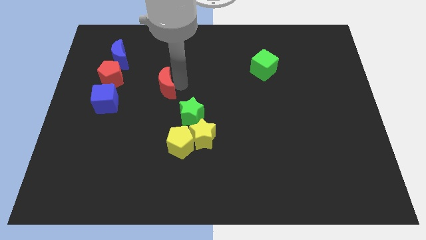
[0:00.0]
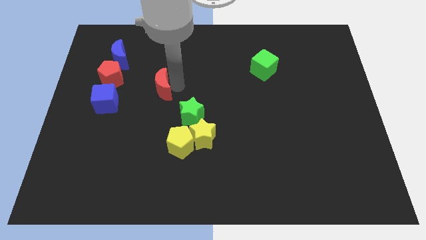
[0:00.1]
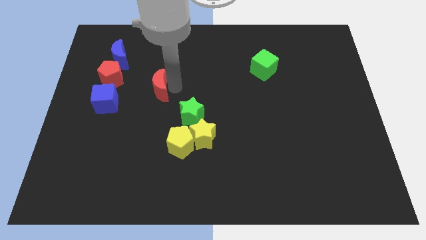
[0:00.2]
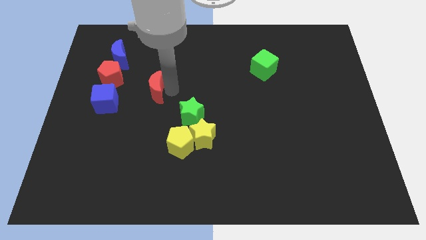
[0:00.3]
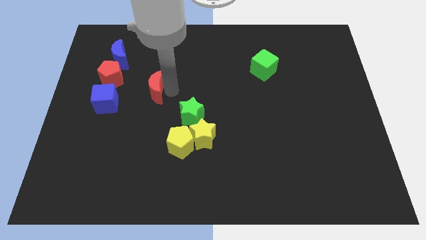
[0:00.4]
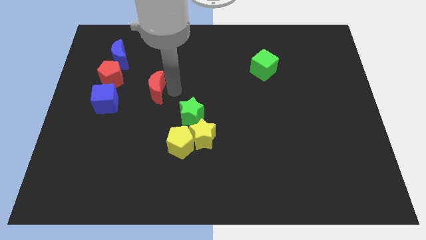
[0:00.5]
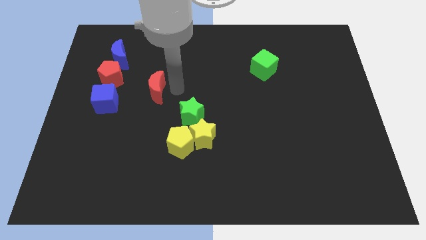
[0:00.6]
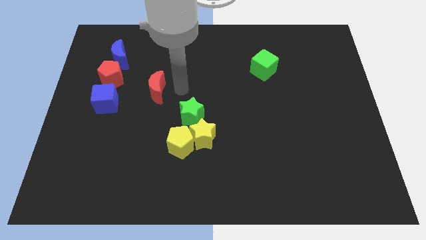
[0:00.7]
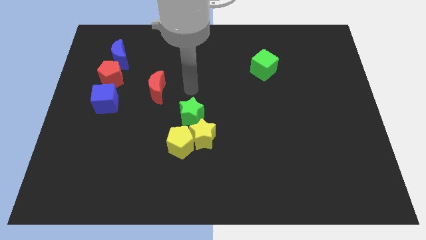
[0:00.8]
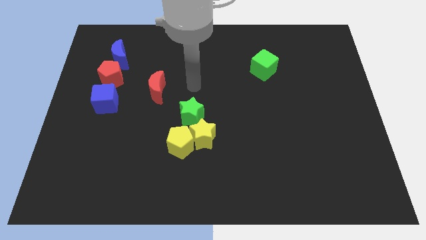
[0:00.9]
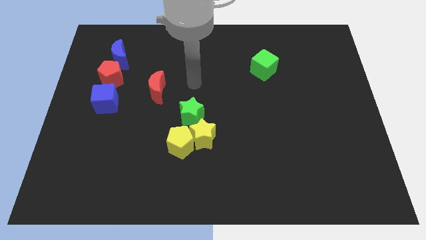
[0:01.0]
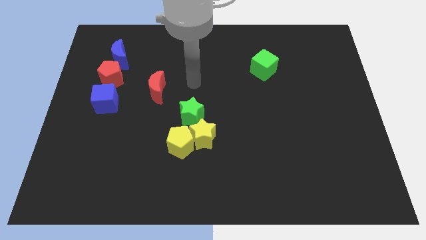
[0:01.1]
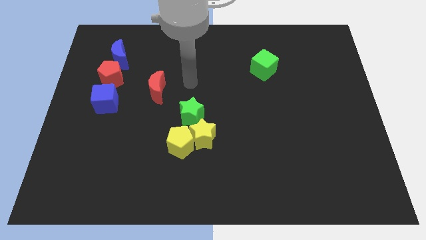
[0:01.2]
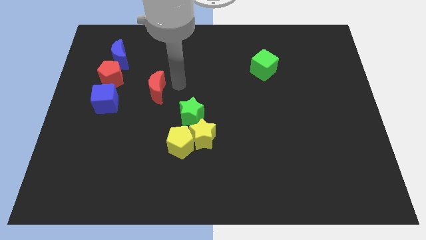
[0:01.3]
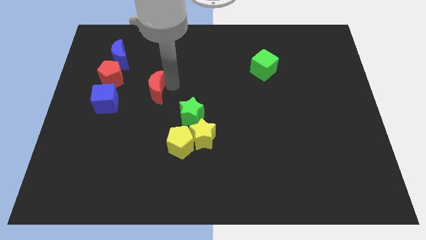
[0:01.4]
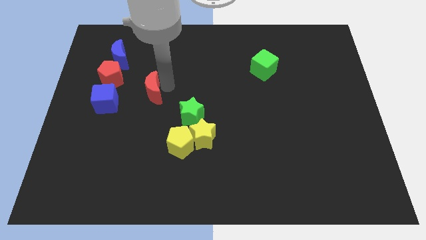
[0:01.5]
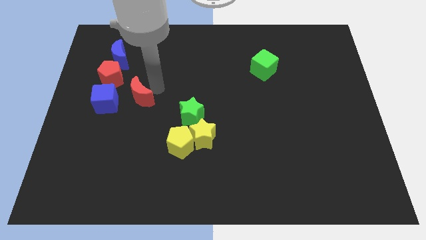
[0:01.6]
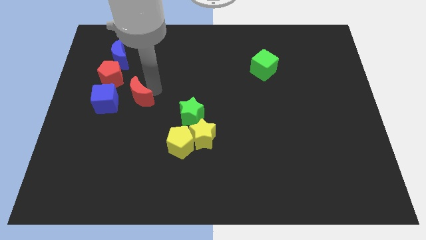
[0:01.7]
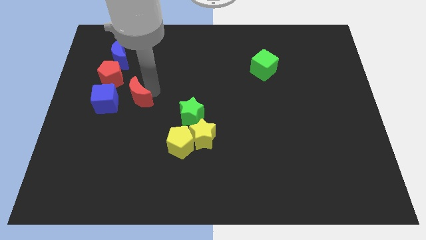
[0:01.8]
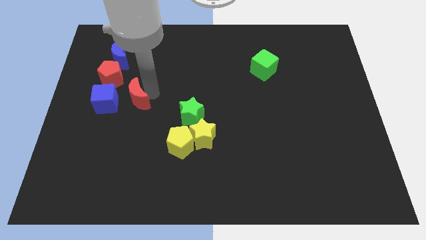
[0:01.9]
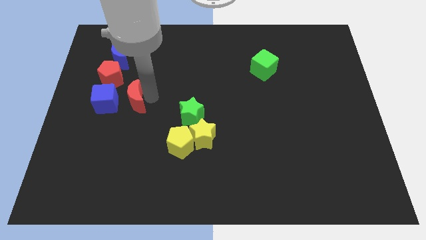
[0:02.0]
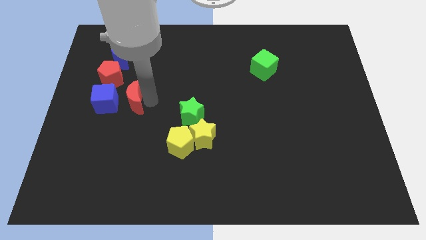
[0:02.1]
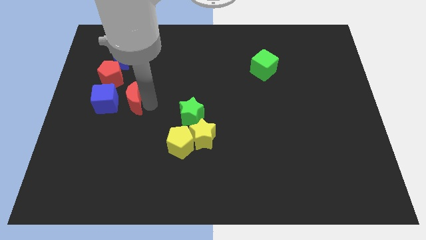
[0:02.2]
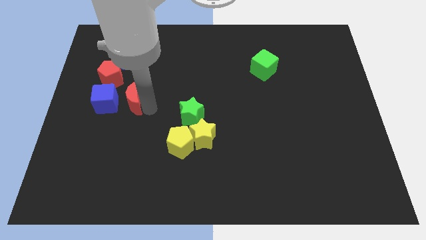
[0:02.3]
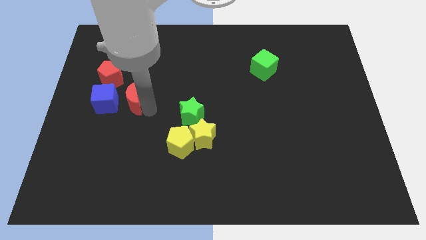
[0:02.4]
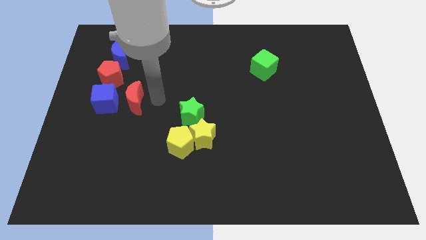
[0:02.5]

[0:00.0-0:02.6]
place red crescent beside blue cube

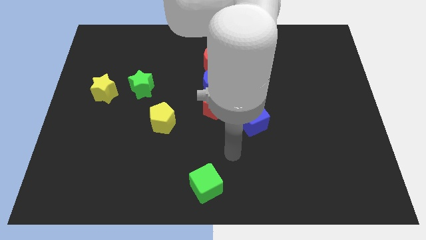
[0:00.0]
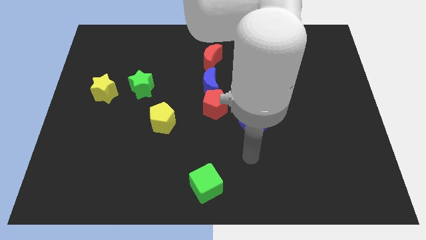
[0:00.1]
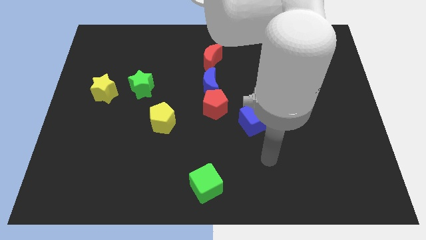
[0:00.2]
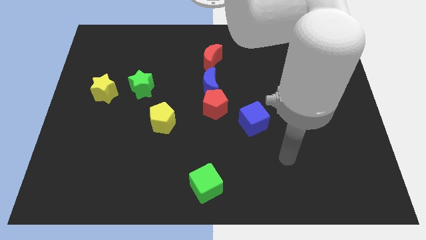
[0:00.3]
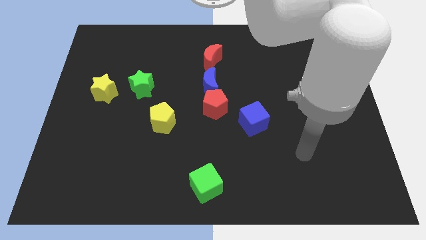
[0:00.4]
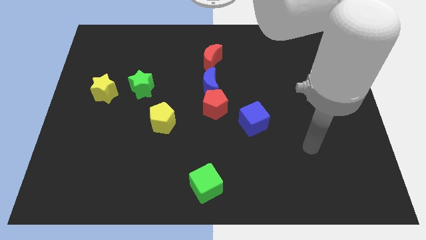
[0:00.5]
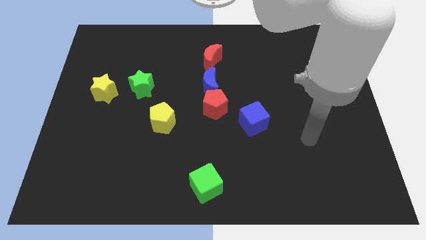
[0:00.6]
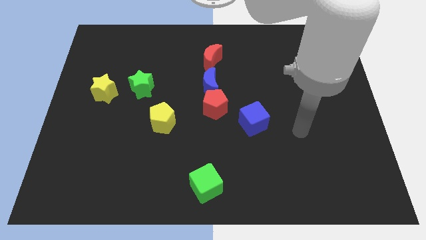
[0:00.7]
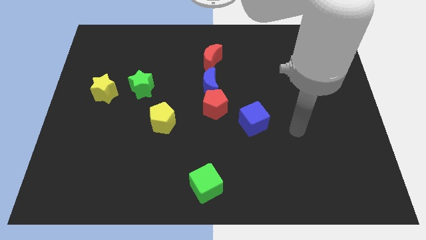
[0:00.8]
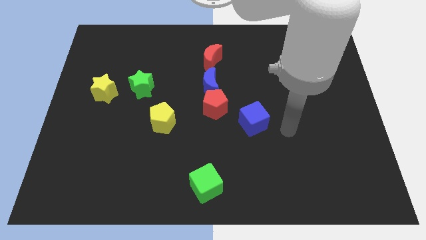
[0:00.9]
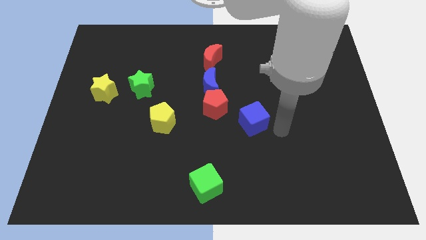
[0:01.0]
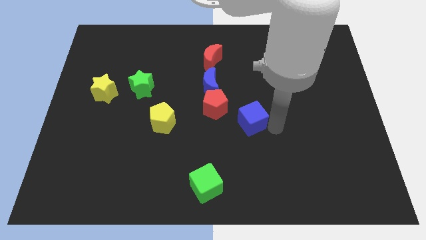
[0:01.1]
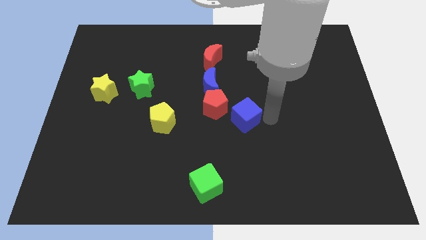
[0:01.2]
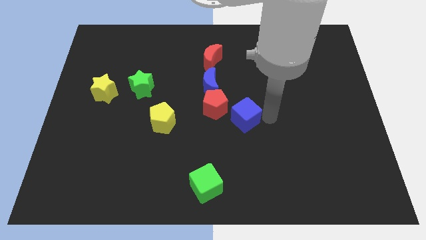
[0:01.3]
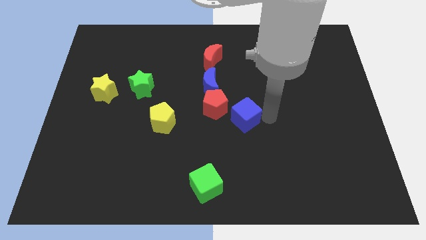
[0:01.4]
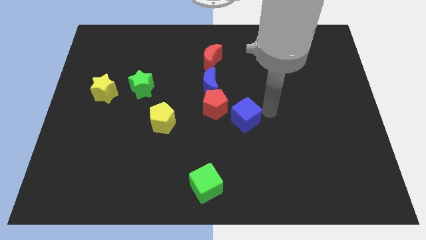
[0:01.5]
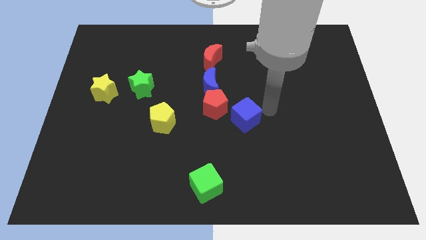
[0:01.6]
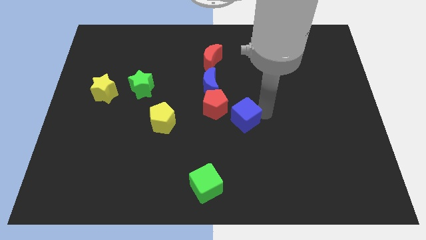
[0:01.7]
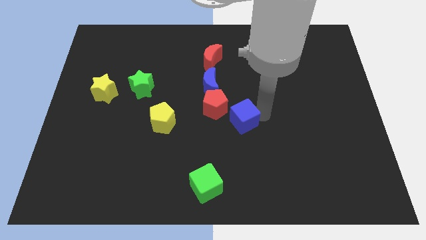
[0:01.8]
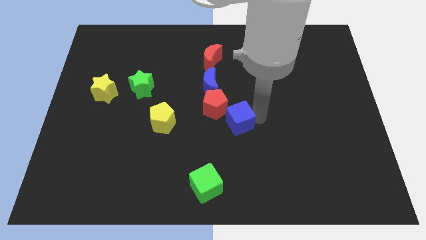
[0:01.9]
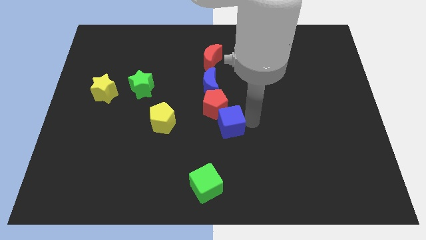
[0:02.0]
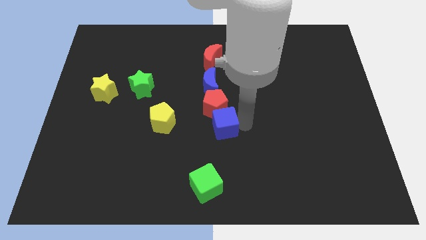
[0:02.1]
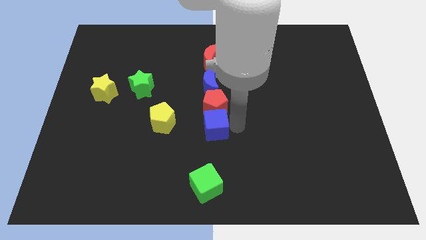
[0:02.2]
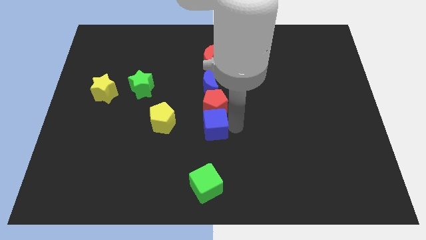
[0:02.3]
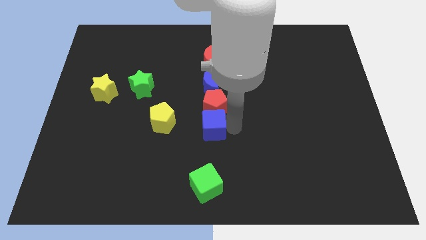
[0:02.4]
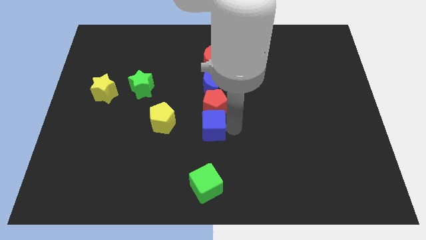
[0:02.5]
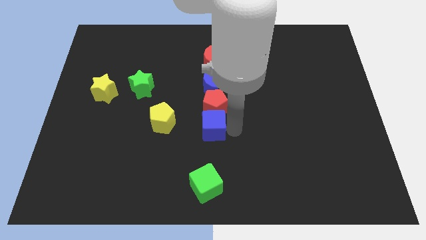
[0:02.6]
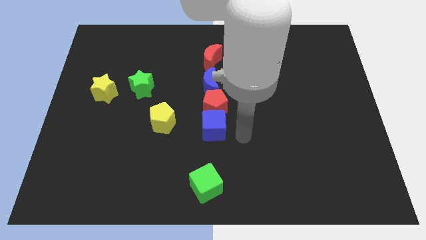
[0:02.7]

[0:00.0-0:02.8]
slide the blue cube below the red pentagon

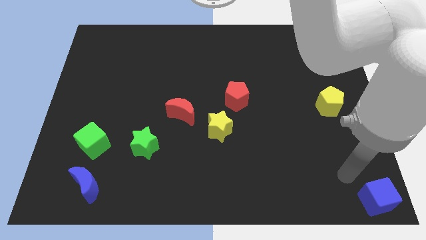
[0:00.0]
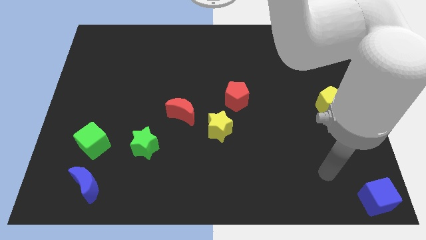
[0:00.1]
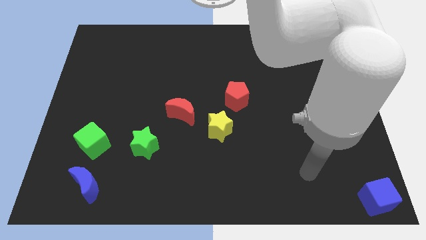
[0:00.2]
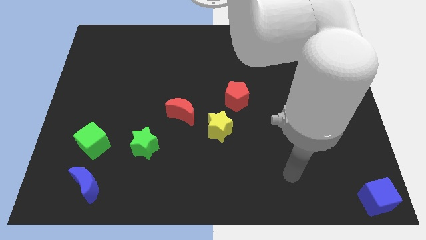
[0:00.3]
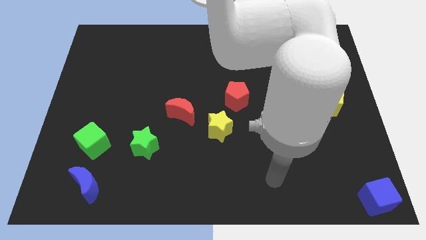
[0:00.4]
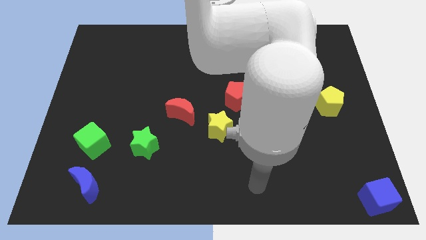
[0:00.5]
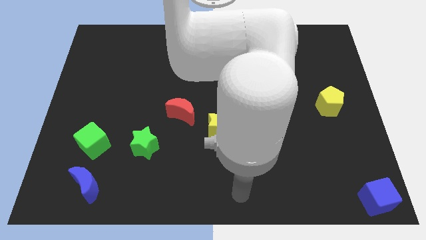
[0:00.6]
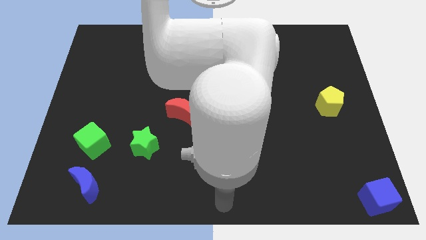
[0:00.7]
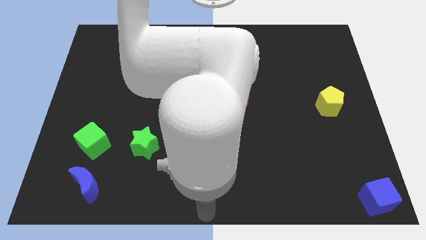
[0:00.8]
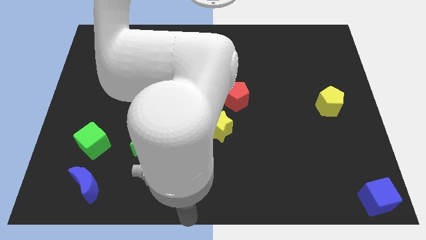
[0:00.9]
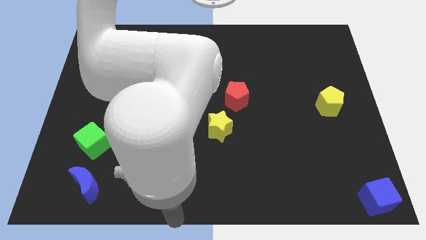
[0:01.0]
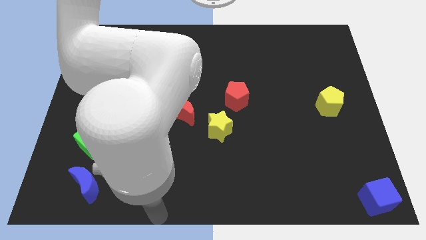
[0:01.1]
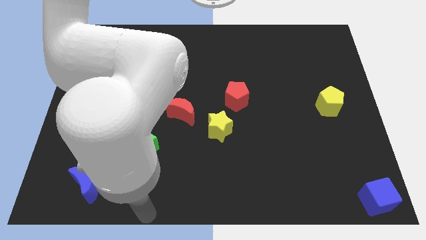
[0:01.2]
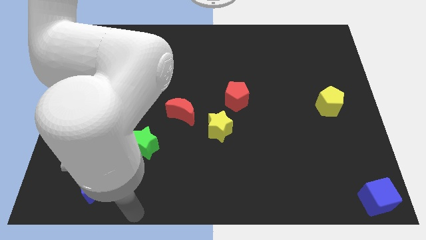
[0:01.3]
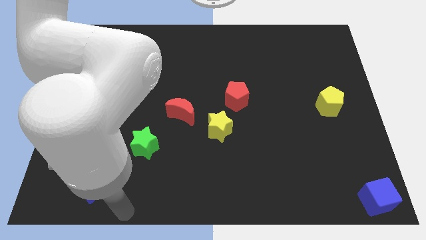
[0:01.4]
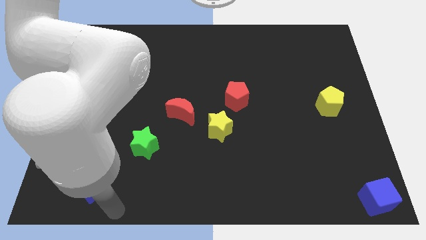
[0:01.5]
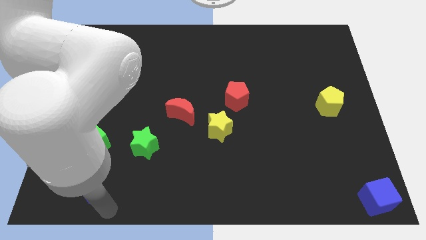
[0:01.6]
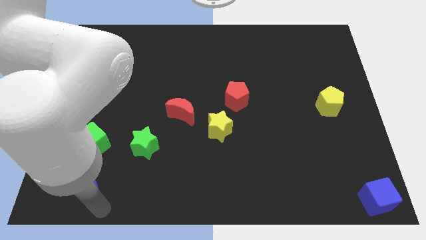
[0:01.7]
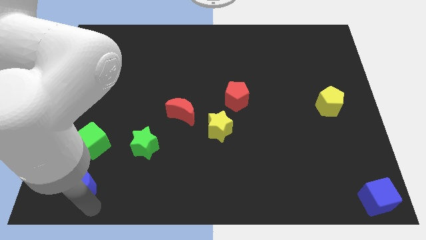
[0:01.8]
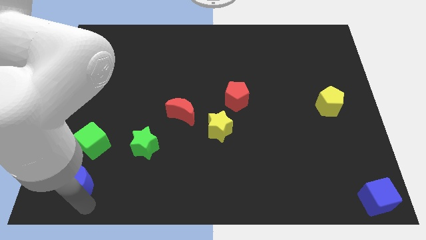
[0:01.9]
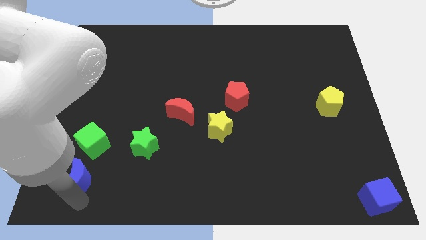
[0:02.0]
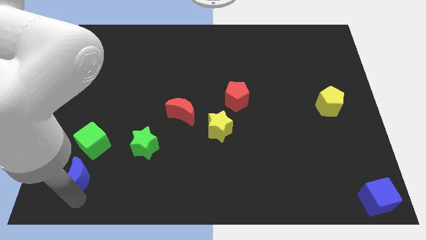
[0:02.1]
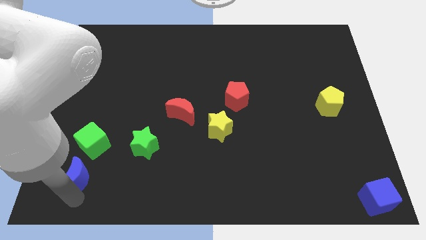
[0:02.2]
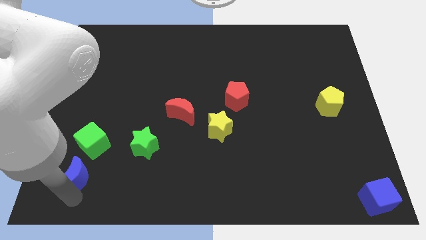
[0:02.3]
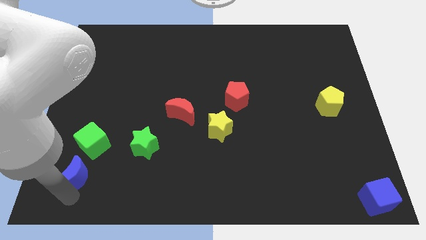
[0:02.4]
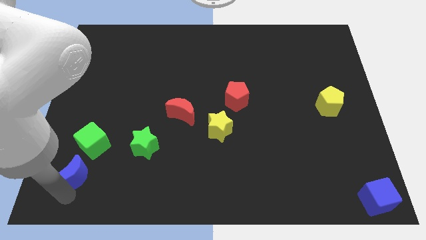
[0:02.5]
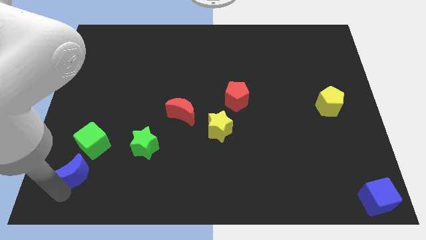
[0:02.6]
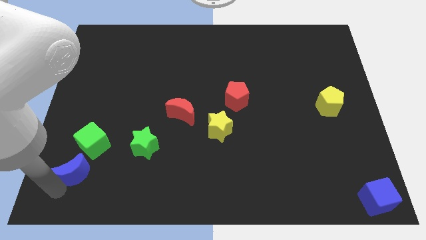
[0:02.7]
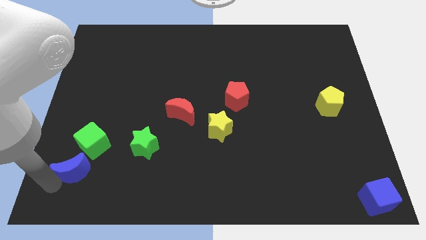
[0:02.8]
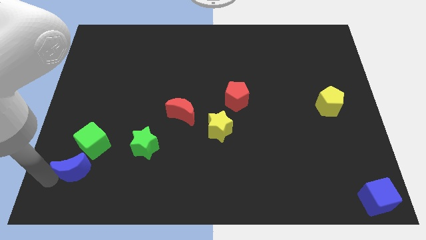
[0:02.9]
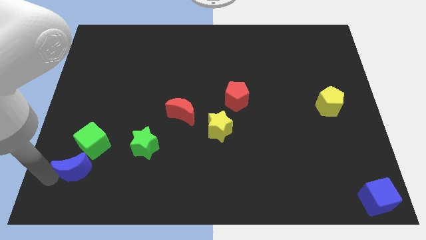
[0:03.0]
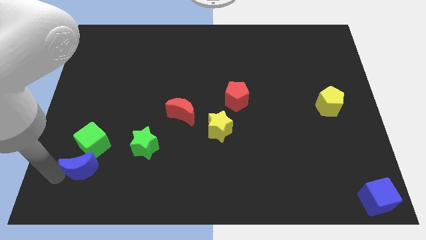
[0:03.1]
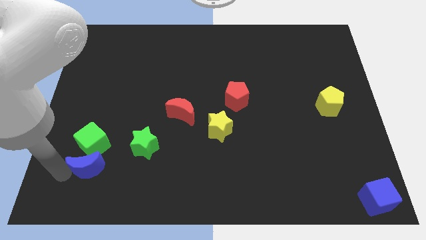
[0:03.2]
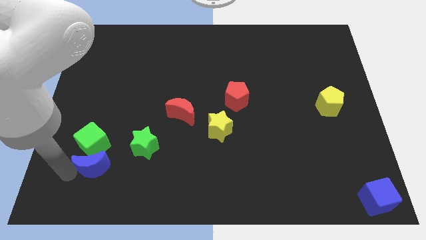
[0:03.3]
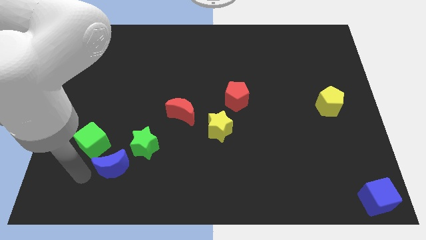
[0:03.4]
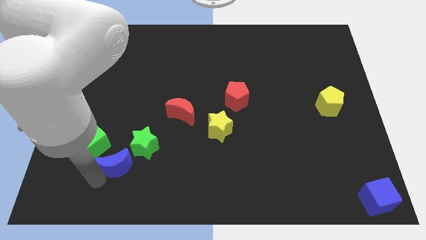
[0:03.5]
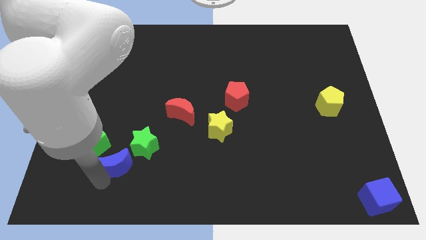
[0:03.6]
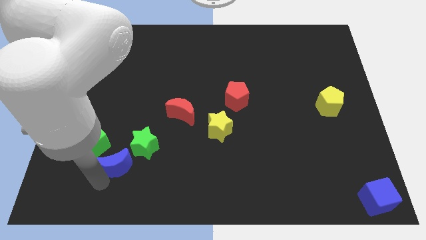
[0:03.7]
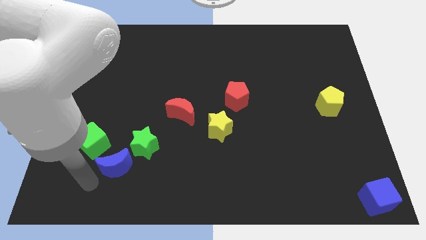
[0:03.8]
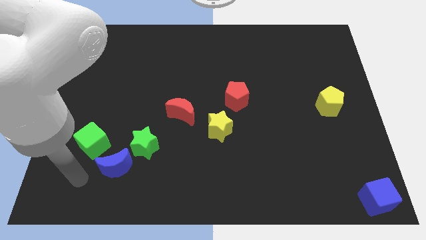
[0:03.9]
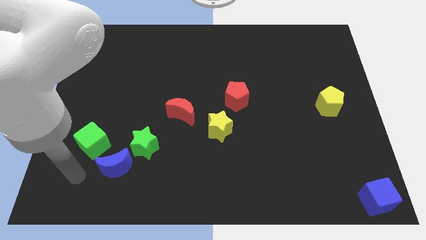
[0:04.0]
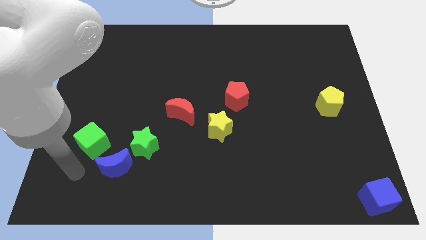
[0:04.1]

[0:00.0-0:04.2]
push the blue crescent close to the green star
